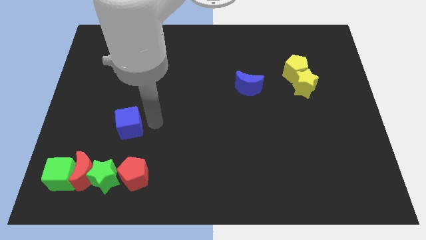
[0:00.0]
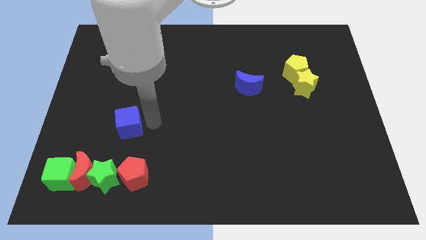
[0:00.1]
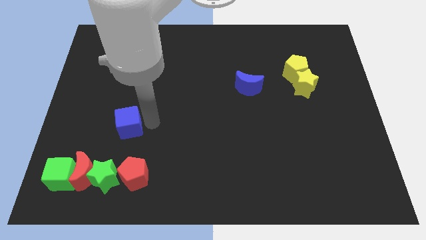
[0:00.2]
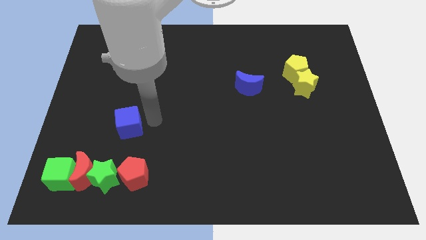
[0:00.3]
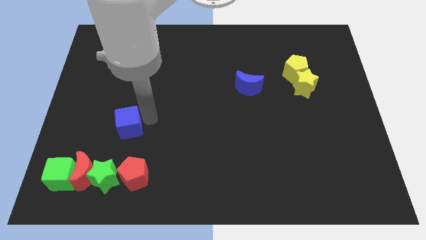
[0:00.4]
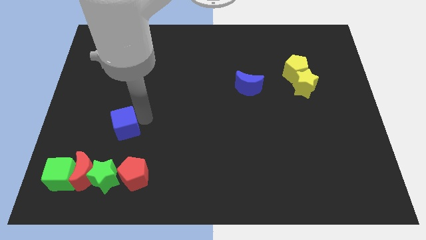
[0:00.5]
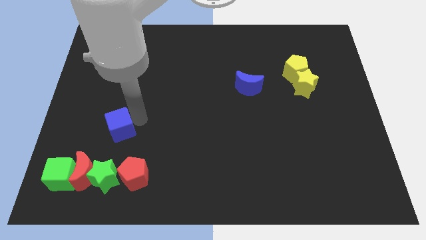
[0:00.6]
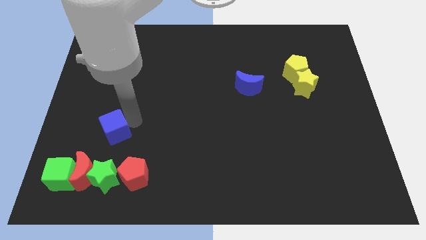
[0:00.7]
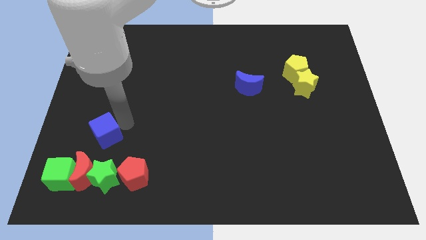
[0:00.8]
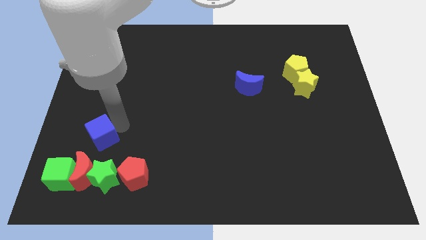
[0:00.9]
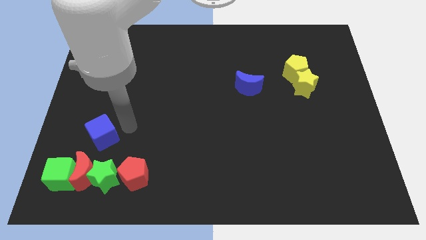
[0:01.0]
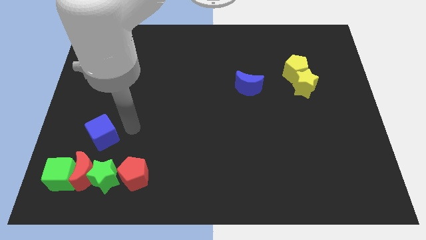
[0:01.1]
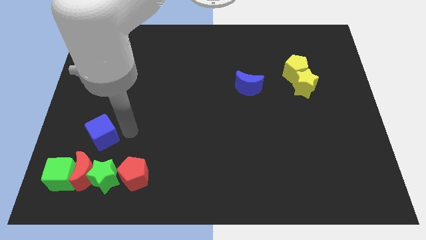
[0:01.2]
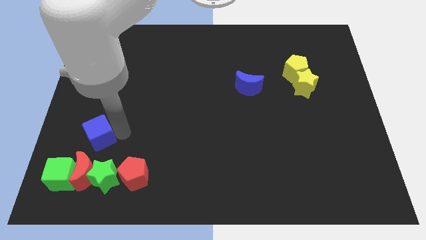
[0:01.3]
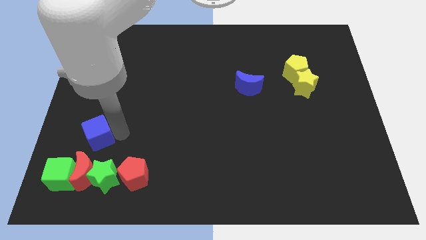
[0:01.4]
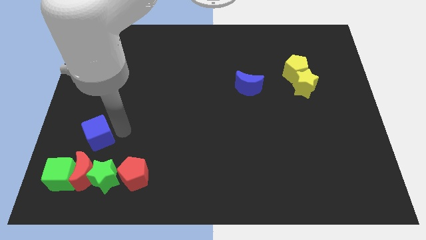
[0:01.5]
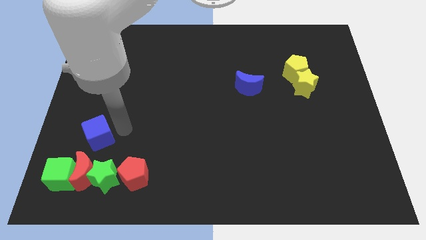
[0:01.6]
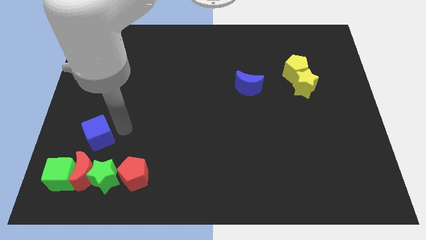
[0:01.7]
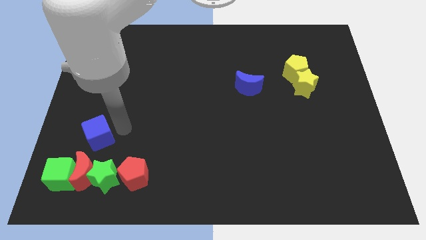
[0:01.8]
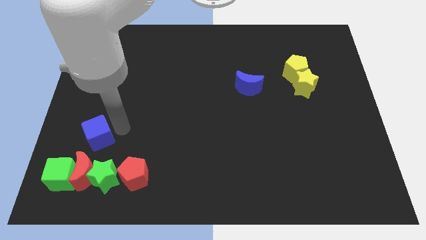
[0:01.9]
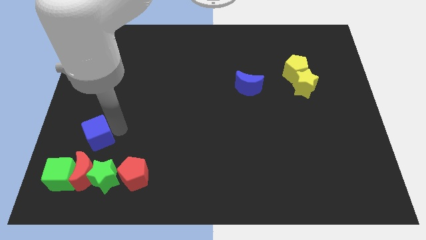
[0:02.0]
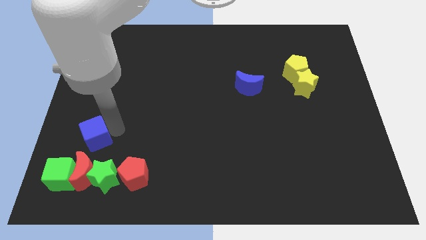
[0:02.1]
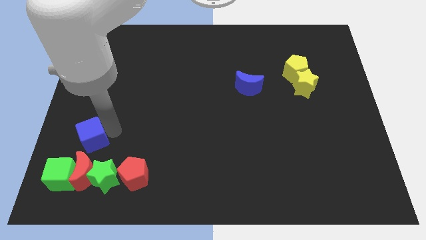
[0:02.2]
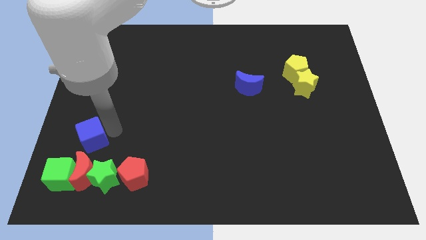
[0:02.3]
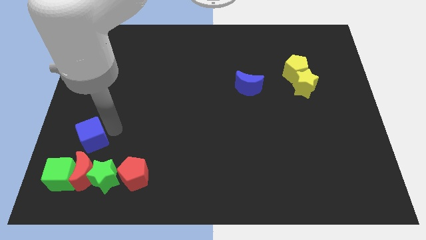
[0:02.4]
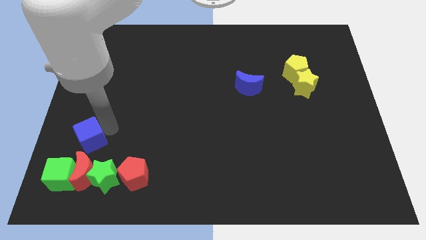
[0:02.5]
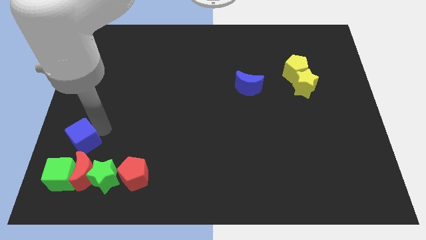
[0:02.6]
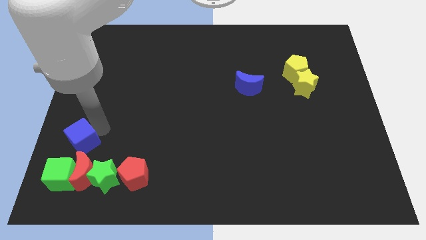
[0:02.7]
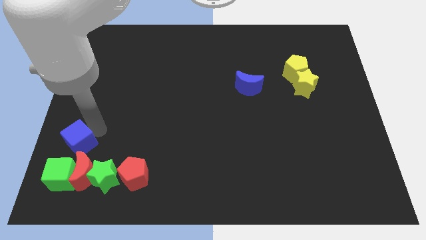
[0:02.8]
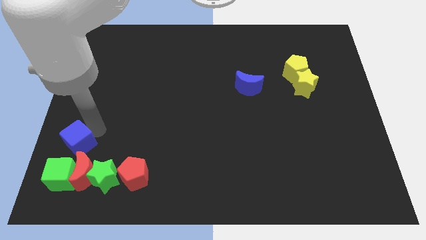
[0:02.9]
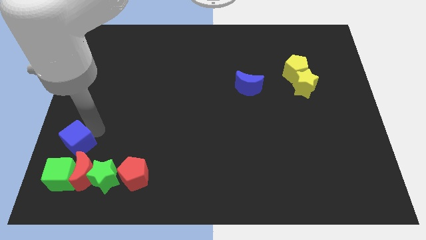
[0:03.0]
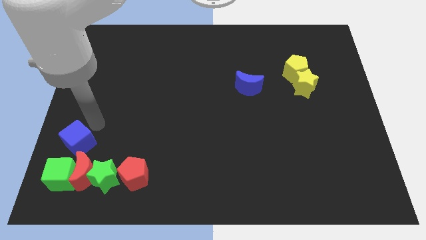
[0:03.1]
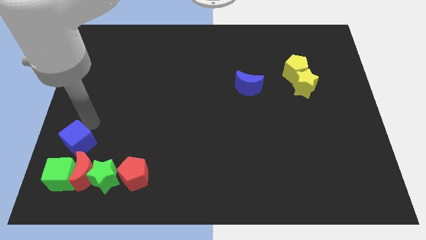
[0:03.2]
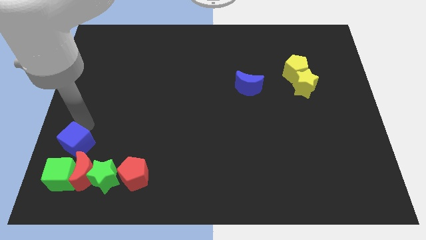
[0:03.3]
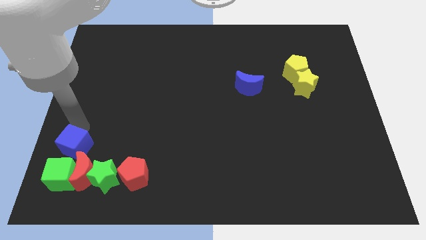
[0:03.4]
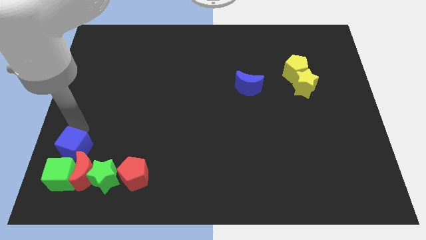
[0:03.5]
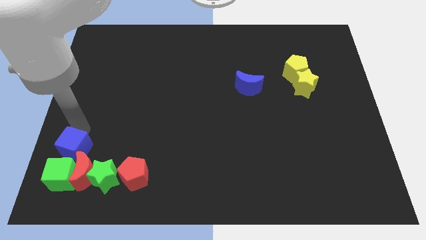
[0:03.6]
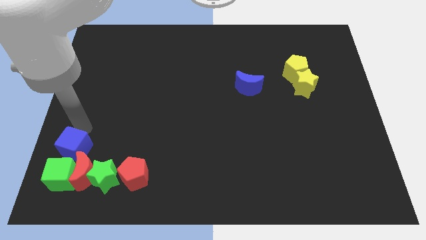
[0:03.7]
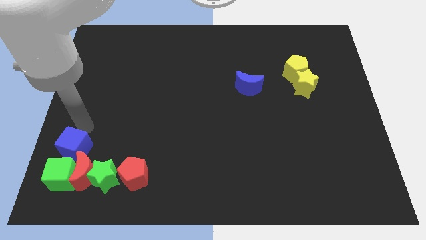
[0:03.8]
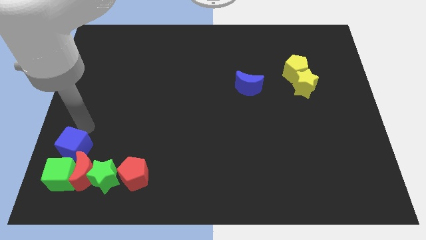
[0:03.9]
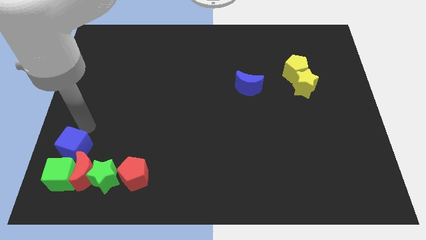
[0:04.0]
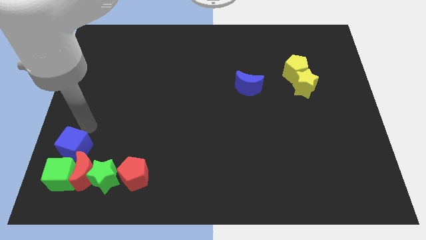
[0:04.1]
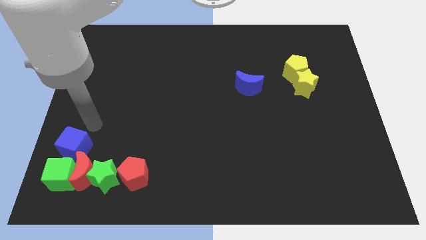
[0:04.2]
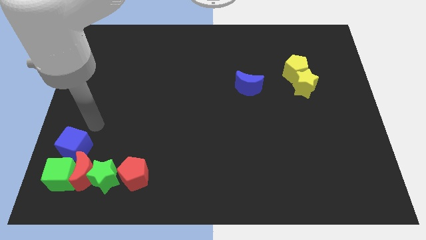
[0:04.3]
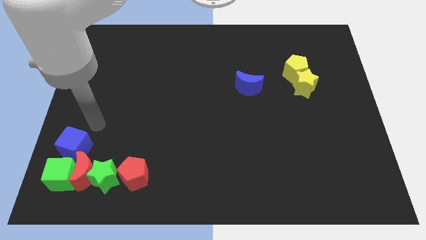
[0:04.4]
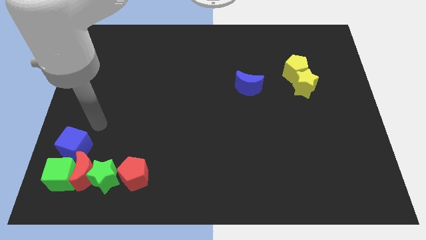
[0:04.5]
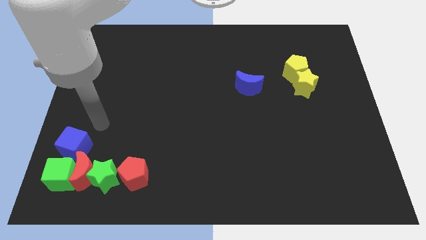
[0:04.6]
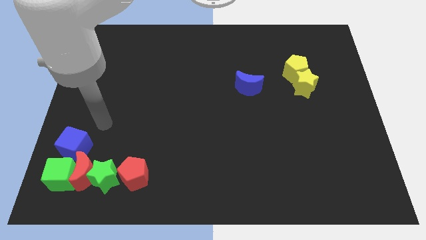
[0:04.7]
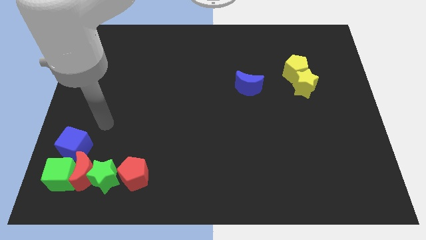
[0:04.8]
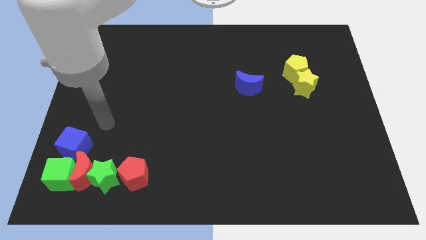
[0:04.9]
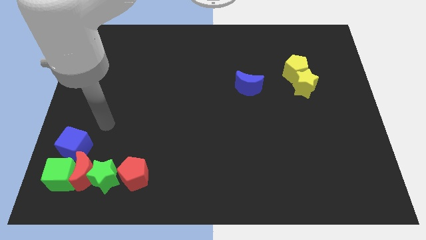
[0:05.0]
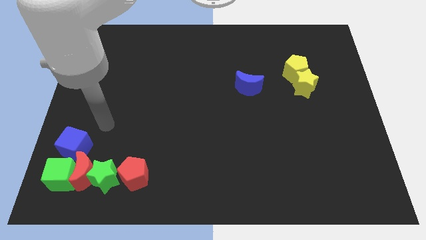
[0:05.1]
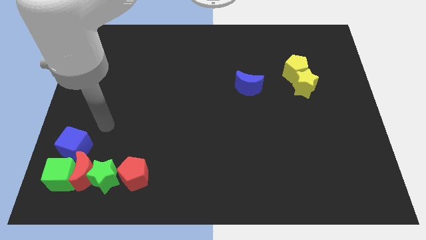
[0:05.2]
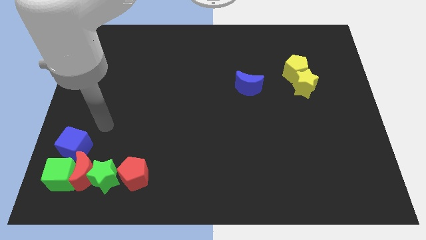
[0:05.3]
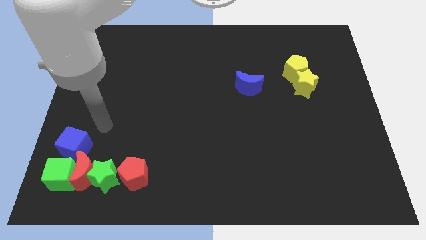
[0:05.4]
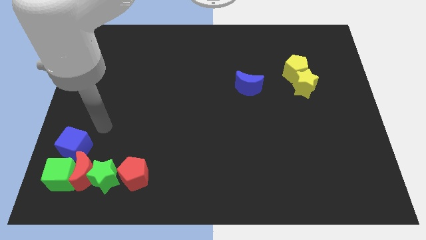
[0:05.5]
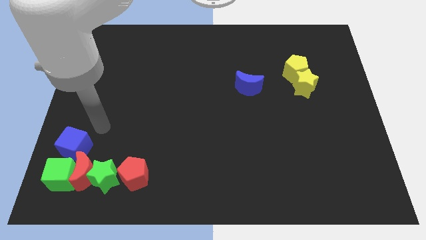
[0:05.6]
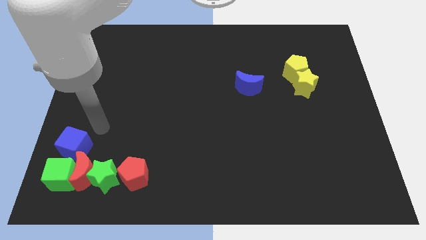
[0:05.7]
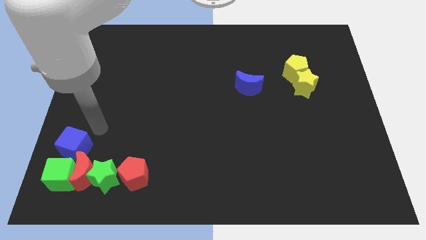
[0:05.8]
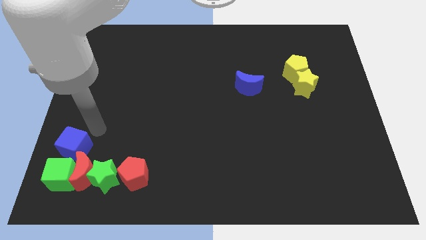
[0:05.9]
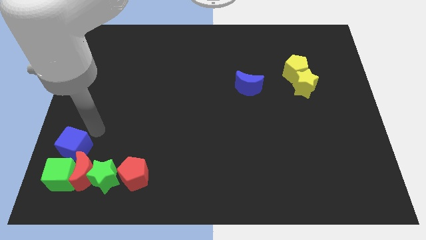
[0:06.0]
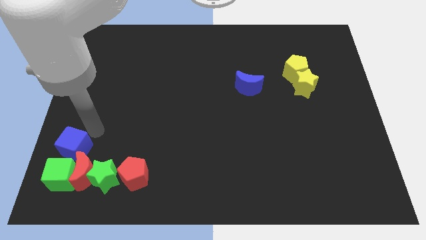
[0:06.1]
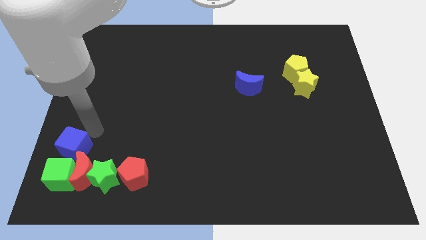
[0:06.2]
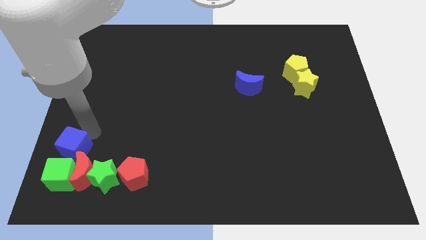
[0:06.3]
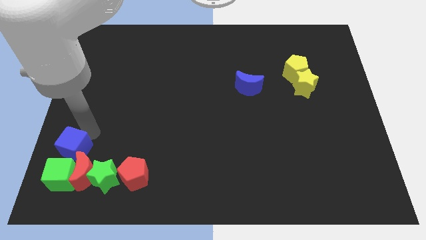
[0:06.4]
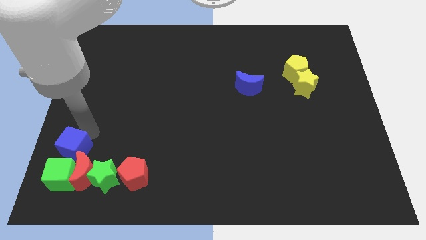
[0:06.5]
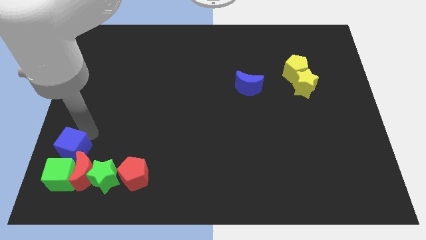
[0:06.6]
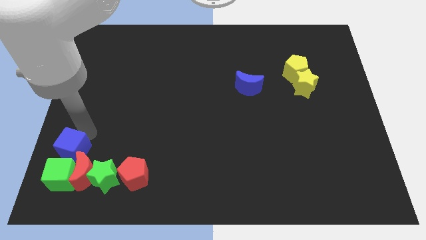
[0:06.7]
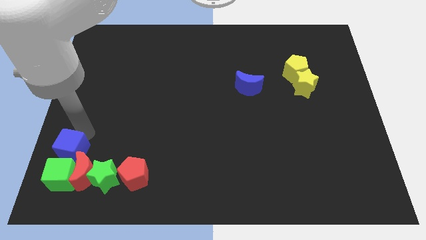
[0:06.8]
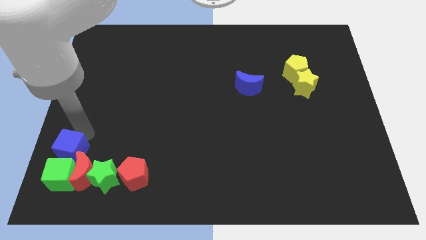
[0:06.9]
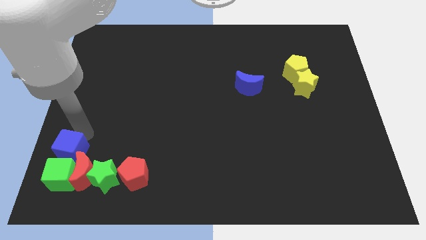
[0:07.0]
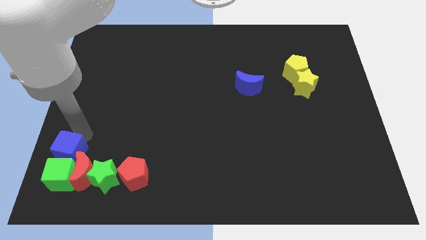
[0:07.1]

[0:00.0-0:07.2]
move blue cube to the top of green cube

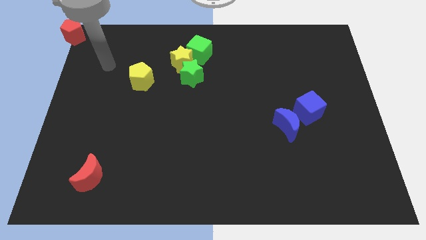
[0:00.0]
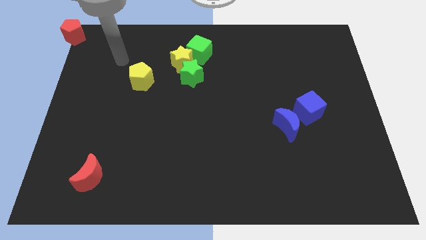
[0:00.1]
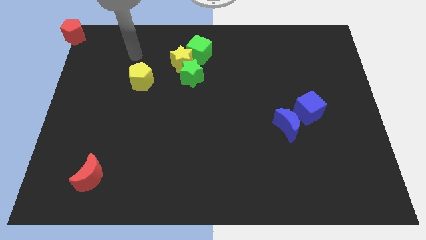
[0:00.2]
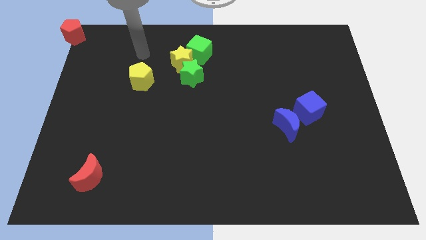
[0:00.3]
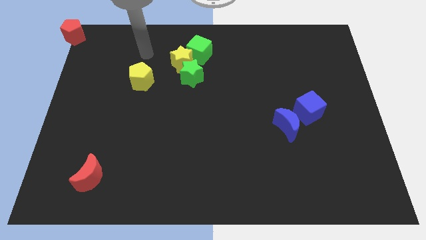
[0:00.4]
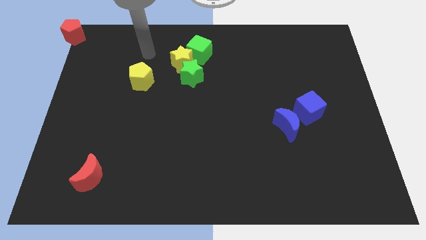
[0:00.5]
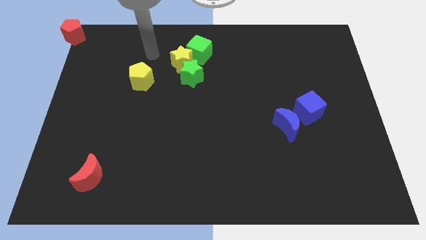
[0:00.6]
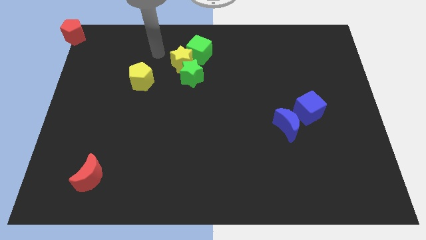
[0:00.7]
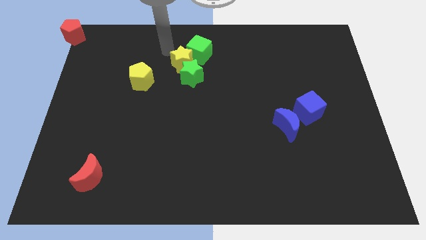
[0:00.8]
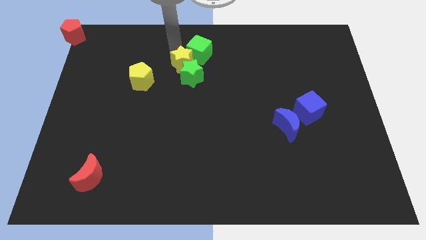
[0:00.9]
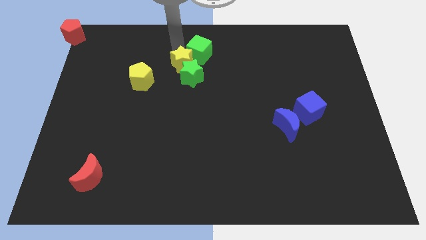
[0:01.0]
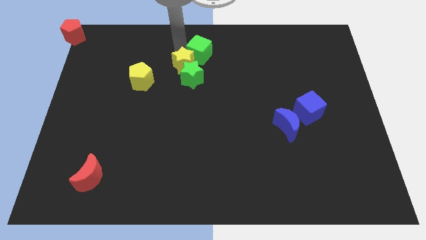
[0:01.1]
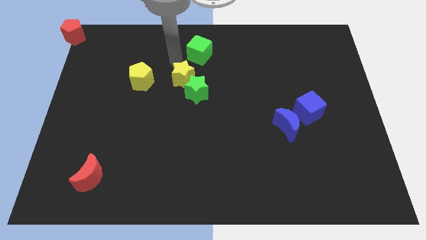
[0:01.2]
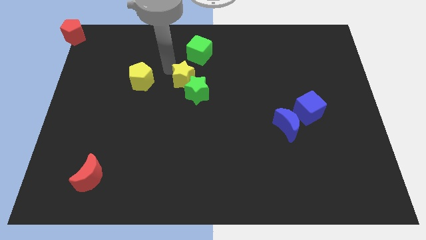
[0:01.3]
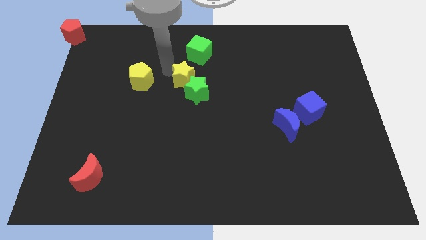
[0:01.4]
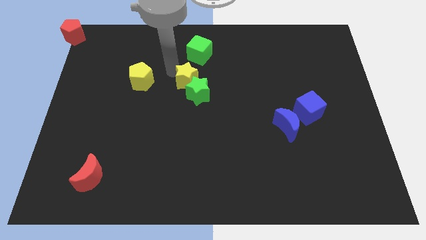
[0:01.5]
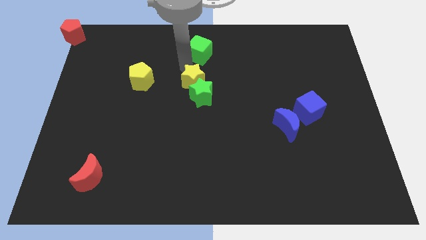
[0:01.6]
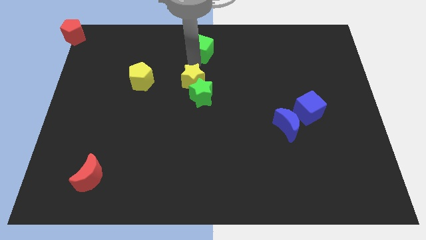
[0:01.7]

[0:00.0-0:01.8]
move the yellow star and the green star down slightly
